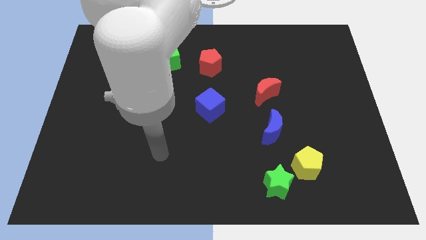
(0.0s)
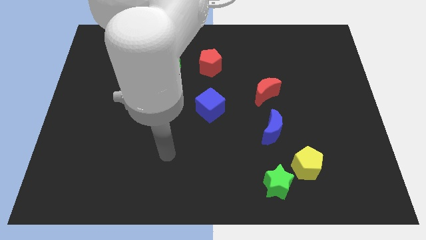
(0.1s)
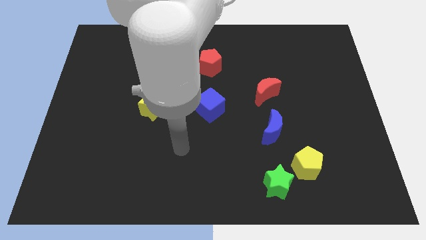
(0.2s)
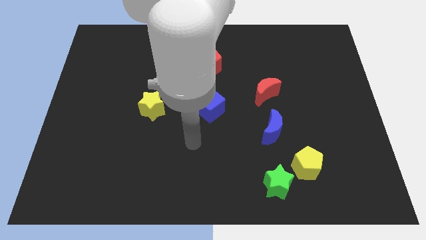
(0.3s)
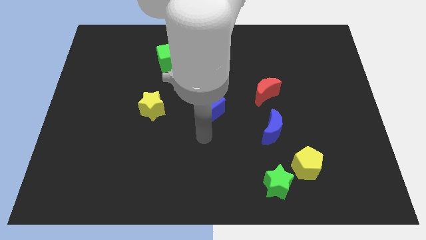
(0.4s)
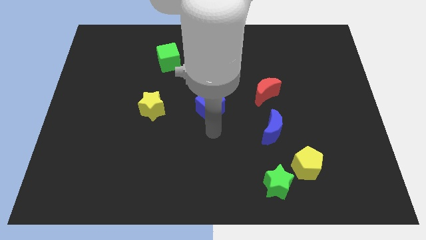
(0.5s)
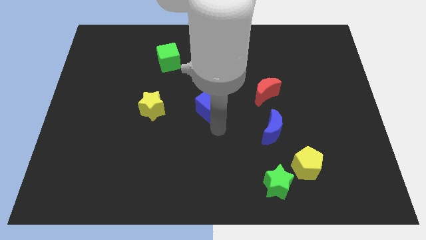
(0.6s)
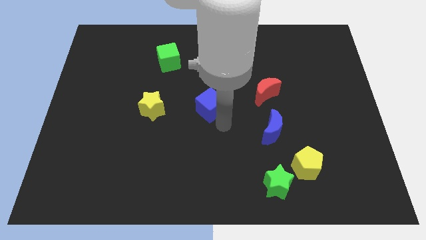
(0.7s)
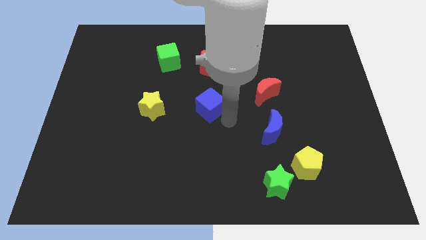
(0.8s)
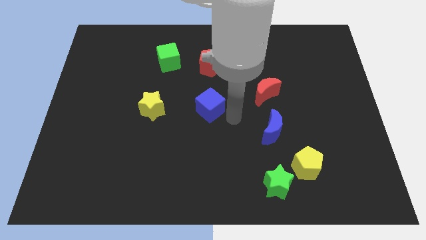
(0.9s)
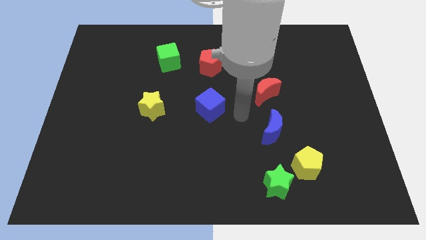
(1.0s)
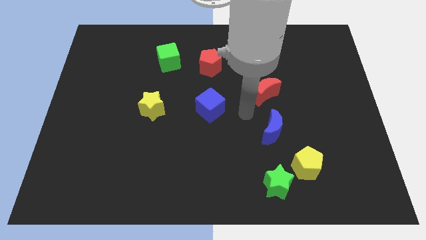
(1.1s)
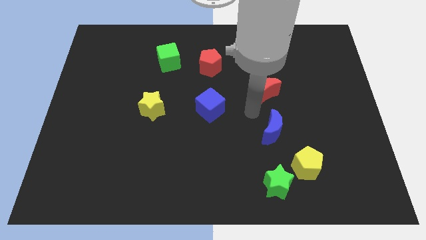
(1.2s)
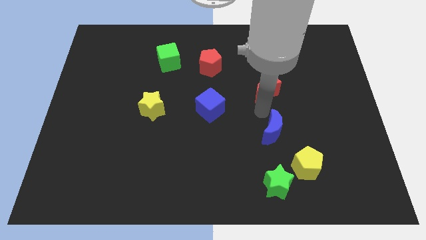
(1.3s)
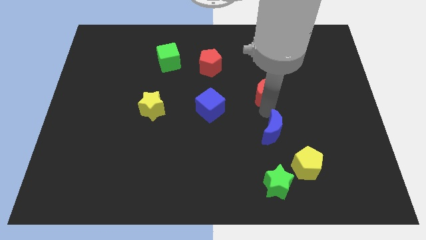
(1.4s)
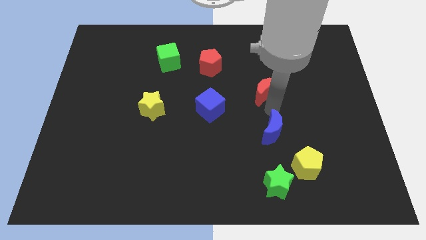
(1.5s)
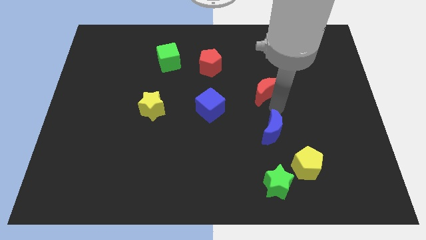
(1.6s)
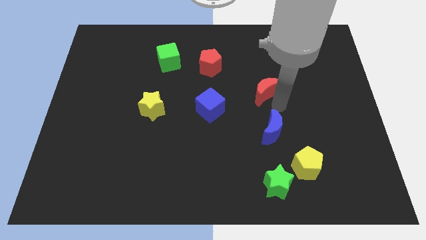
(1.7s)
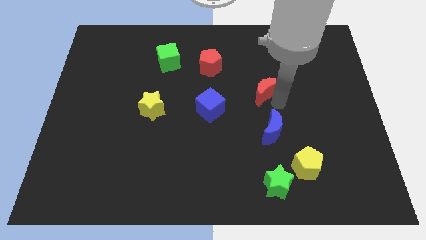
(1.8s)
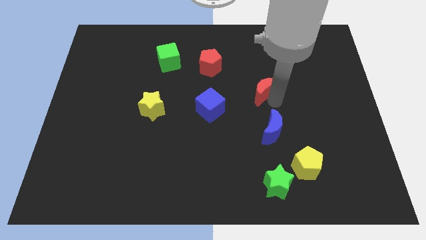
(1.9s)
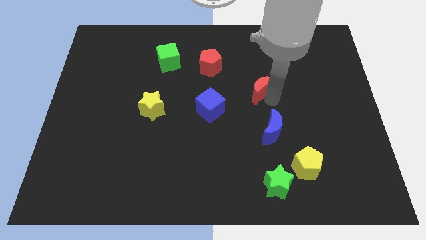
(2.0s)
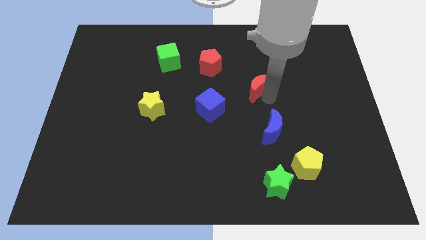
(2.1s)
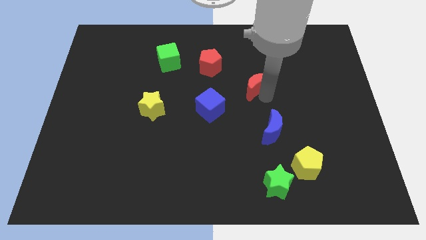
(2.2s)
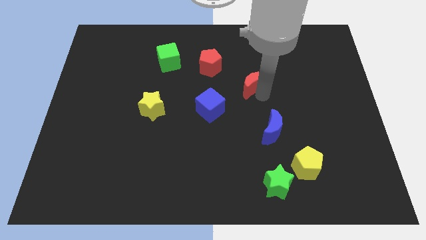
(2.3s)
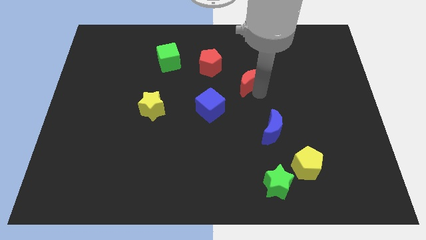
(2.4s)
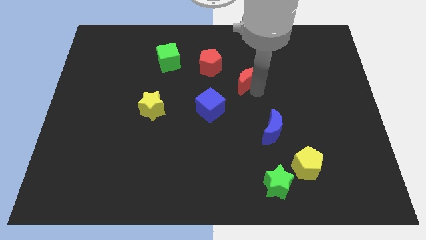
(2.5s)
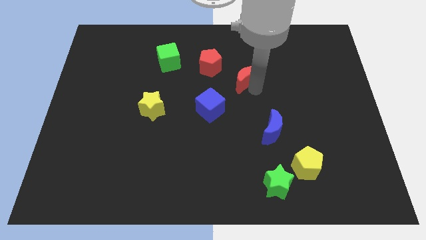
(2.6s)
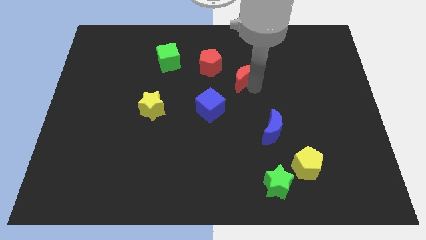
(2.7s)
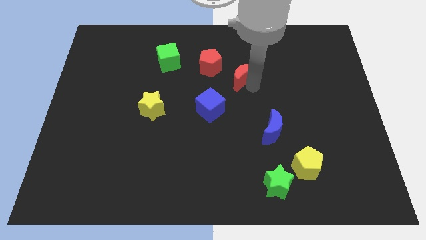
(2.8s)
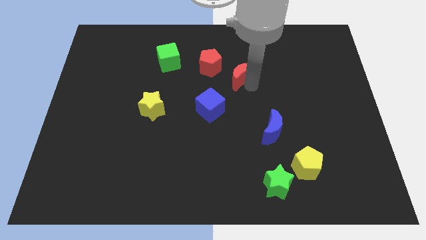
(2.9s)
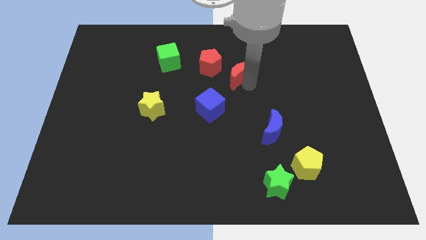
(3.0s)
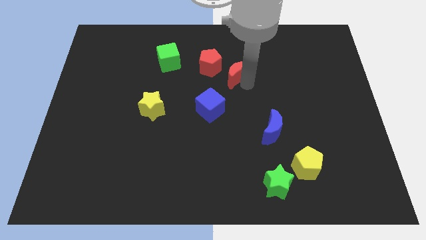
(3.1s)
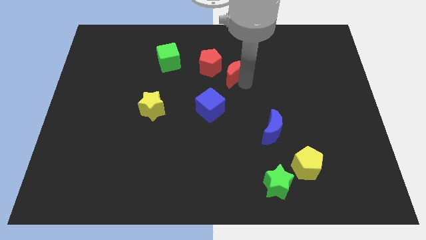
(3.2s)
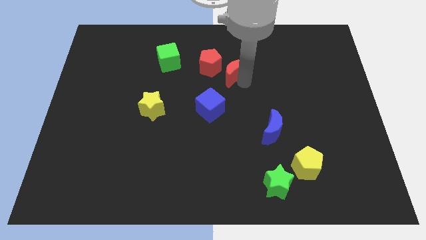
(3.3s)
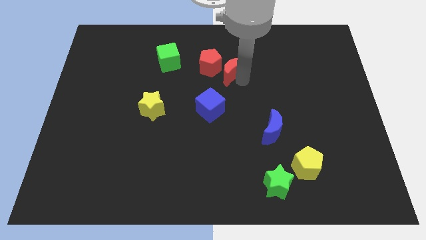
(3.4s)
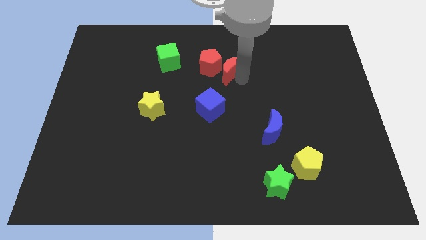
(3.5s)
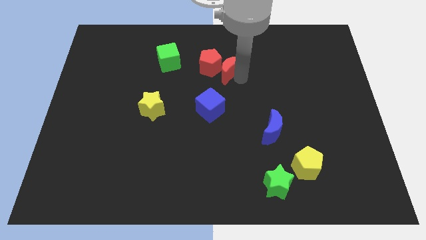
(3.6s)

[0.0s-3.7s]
move the red moon close to the red pentagon

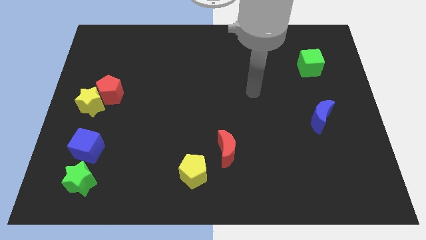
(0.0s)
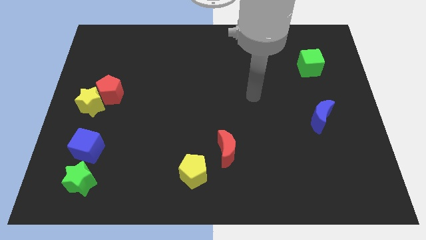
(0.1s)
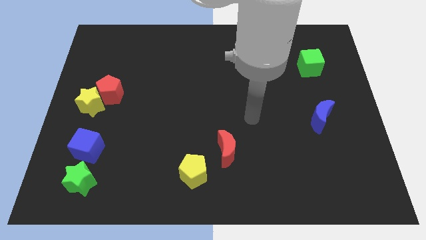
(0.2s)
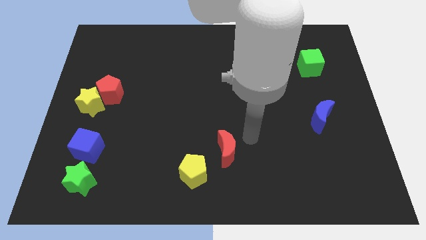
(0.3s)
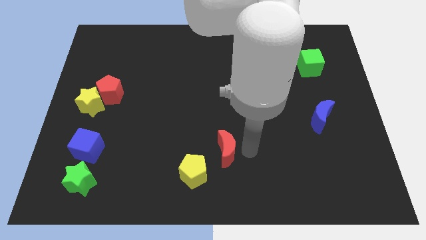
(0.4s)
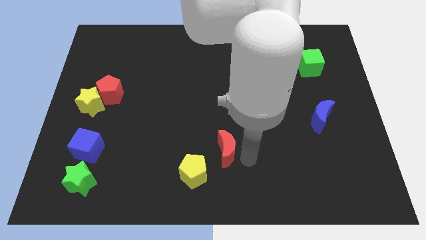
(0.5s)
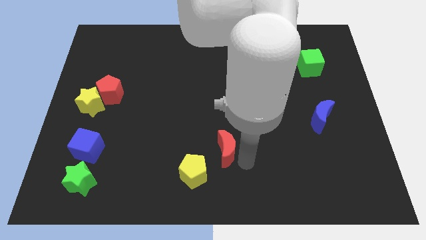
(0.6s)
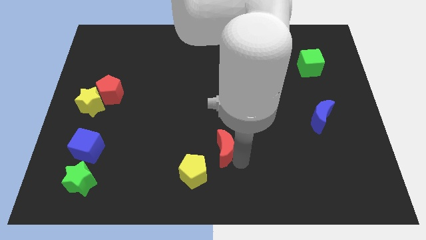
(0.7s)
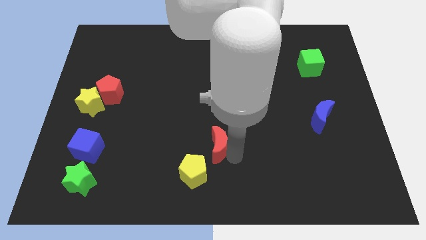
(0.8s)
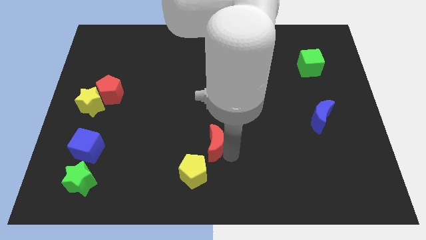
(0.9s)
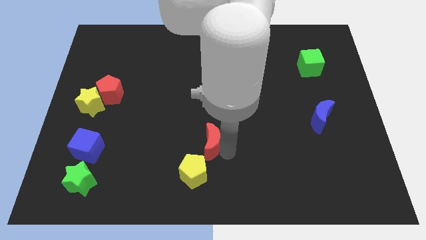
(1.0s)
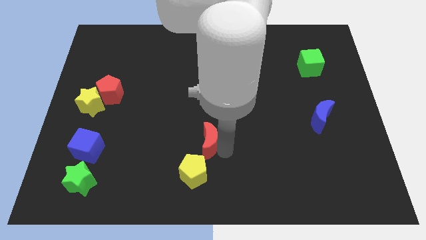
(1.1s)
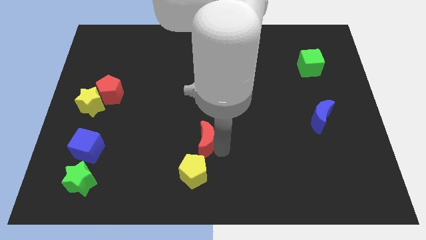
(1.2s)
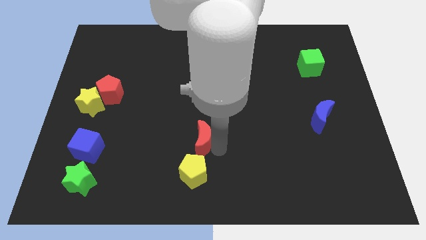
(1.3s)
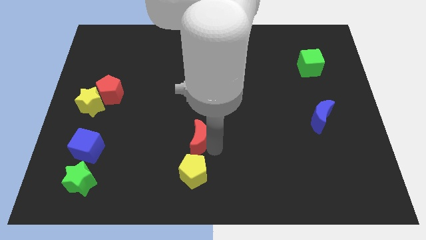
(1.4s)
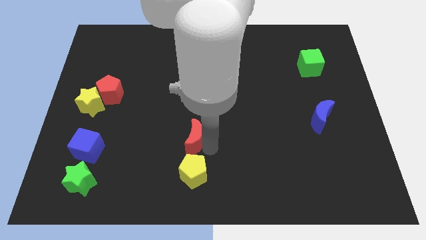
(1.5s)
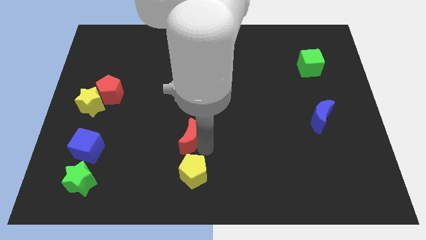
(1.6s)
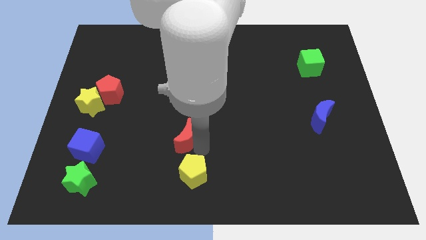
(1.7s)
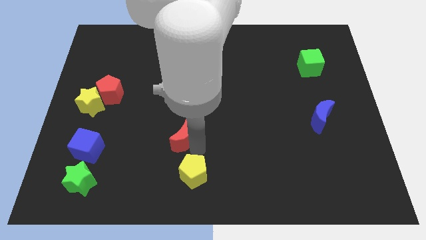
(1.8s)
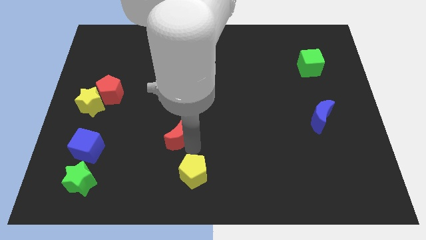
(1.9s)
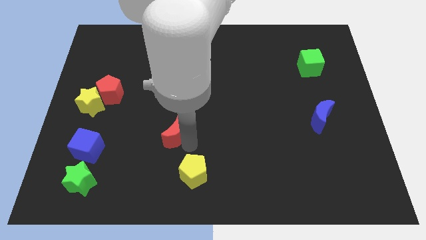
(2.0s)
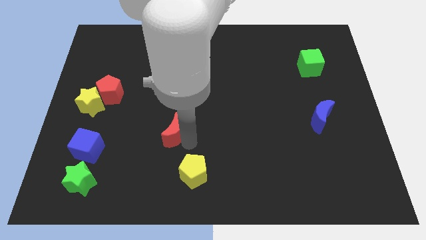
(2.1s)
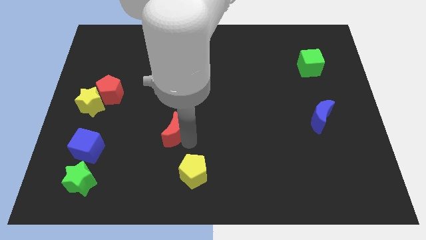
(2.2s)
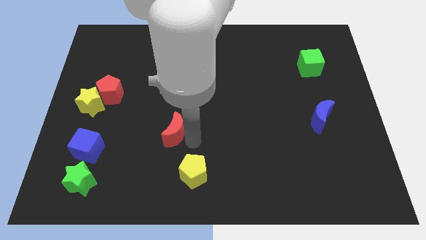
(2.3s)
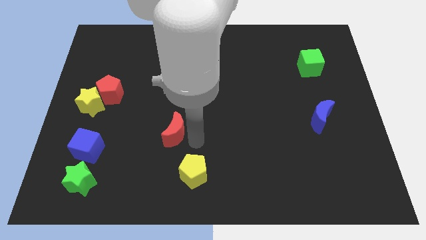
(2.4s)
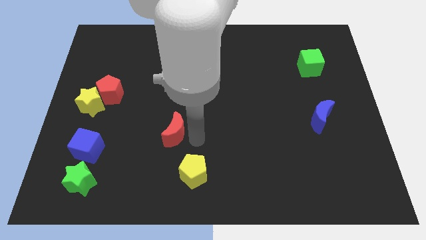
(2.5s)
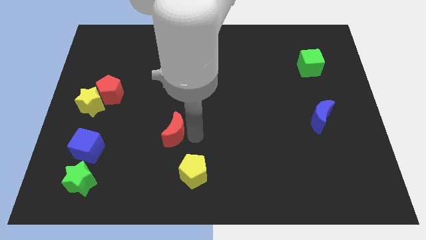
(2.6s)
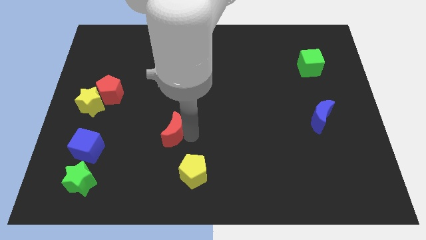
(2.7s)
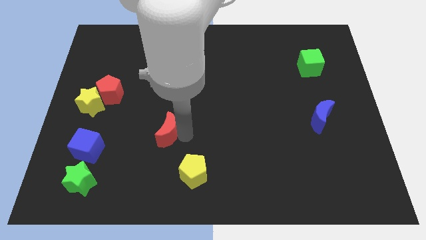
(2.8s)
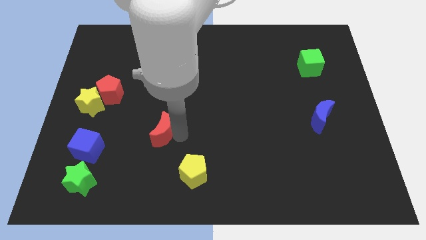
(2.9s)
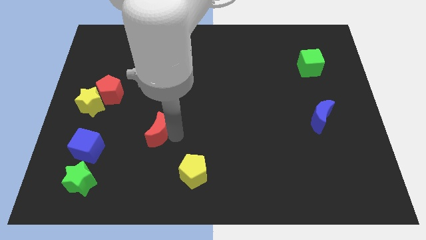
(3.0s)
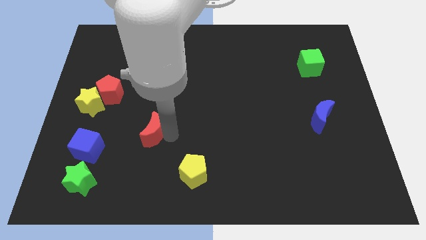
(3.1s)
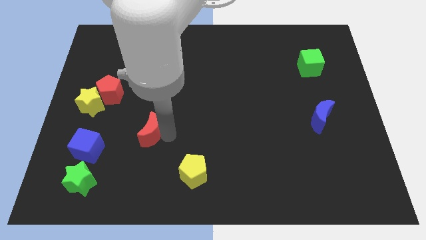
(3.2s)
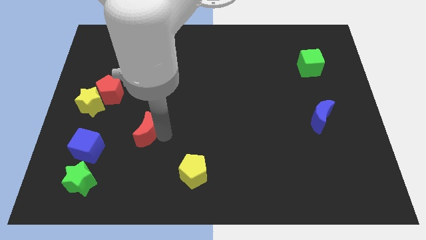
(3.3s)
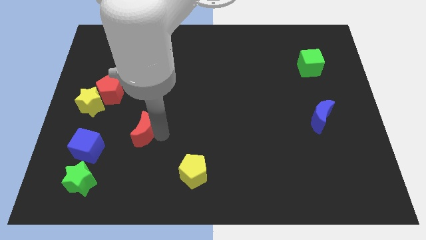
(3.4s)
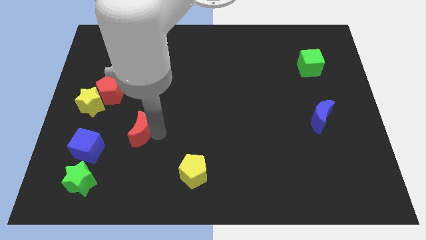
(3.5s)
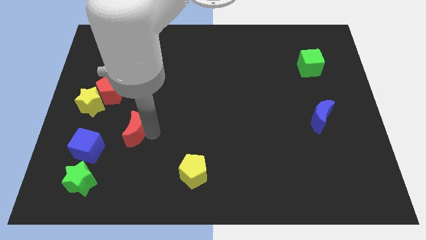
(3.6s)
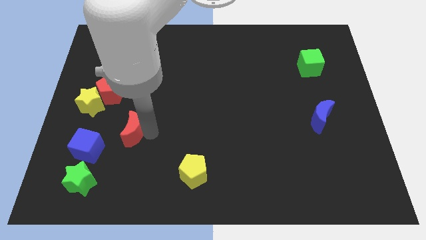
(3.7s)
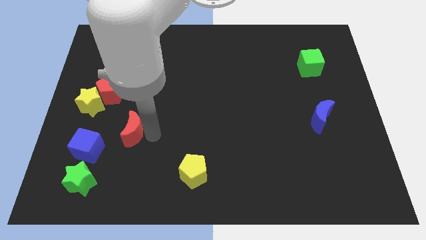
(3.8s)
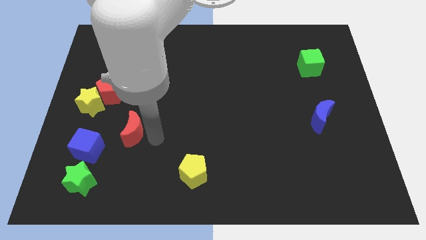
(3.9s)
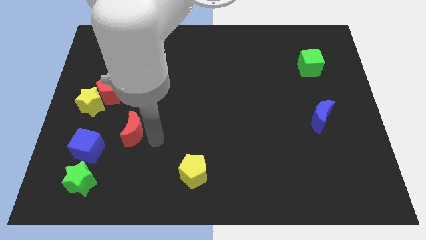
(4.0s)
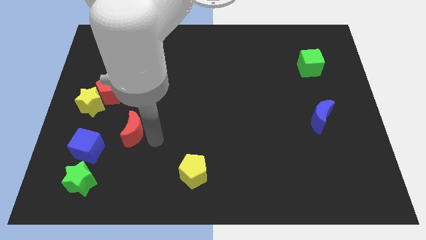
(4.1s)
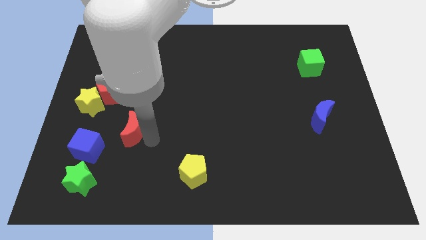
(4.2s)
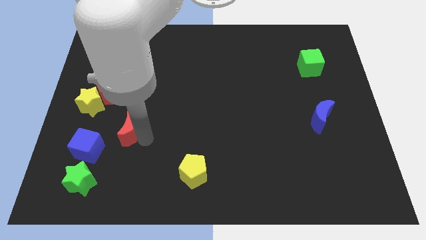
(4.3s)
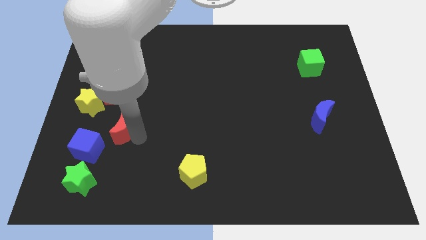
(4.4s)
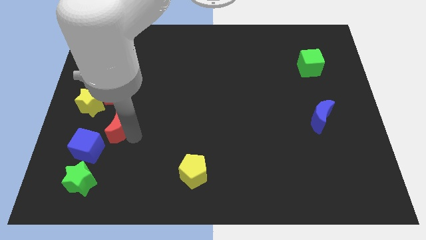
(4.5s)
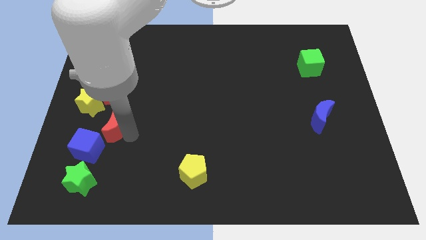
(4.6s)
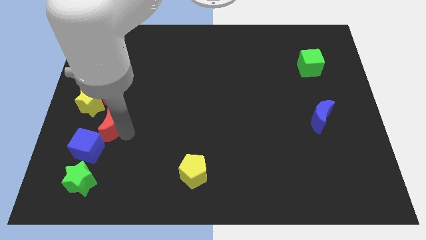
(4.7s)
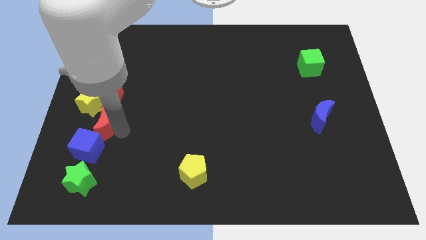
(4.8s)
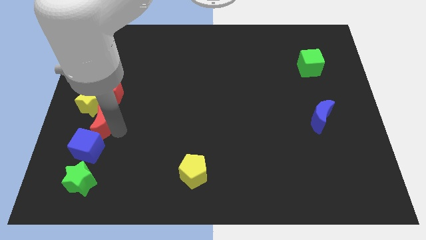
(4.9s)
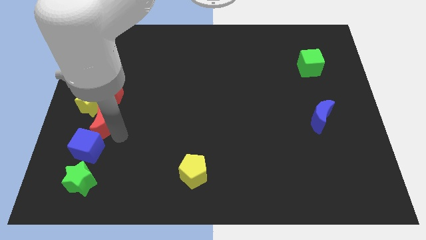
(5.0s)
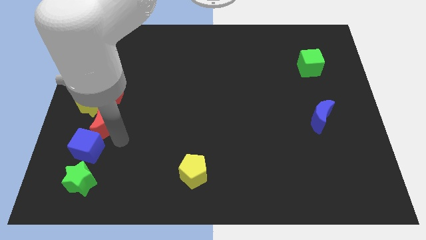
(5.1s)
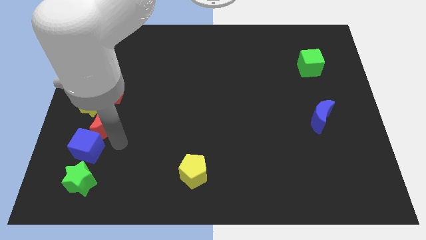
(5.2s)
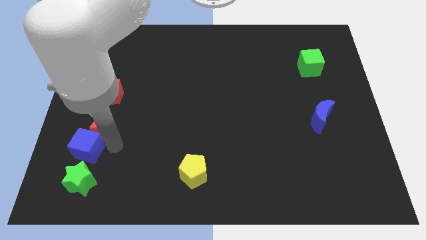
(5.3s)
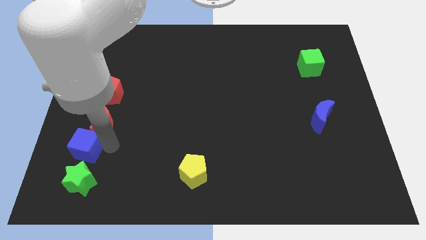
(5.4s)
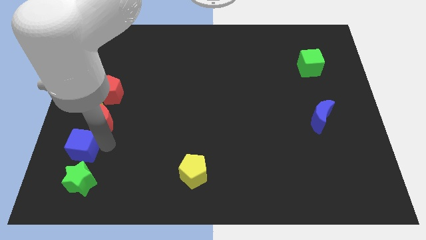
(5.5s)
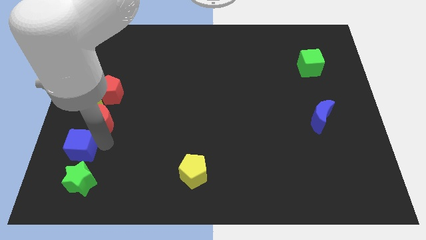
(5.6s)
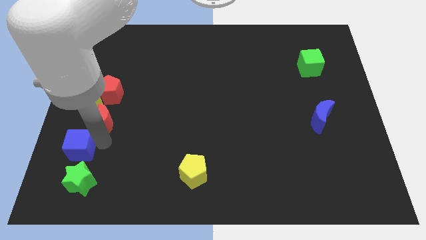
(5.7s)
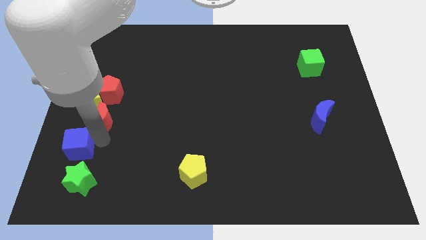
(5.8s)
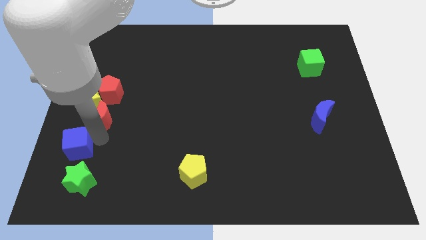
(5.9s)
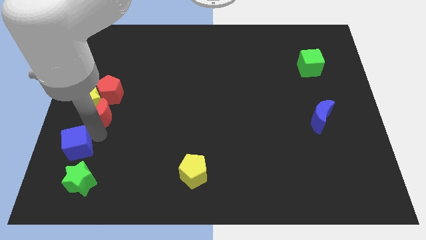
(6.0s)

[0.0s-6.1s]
push the red moon to the yellow star
